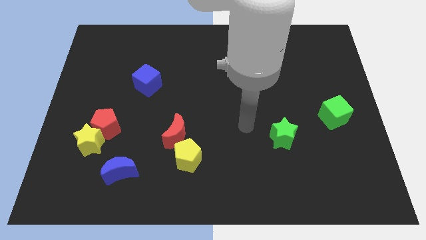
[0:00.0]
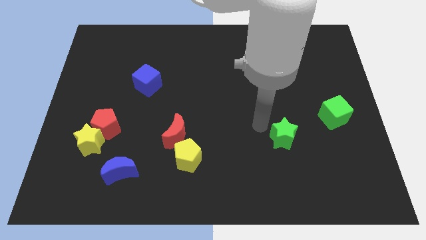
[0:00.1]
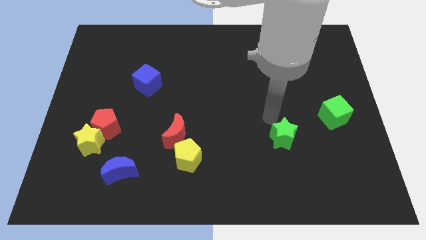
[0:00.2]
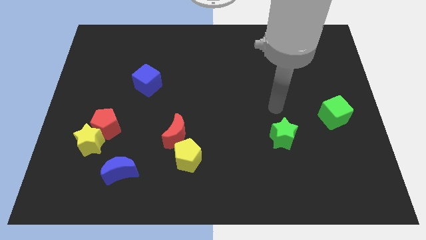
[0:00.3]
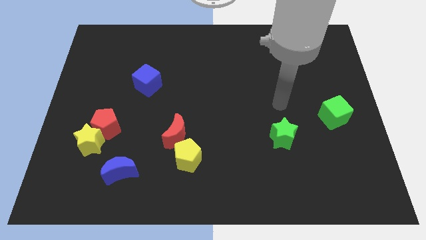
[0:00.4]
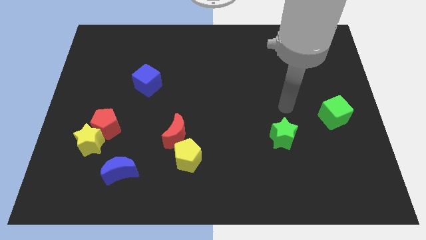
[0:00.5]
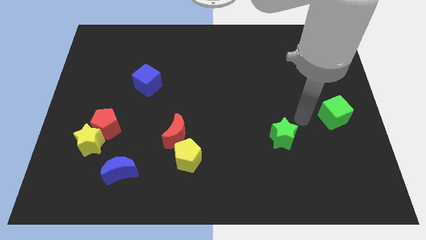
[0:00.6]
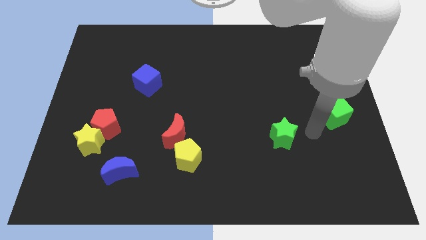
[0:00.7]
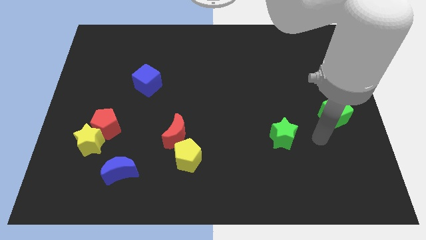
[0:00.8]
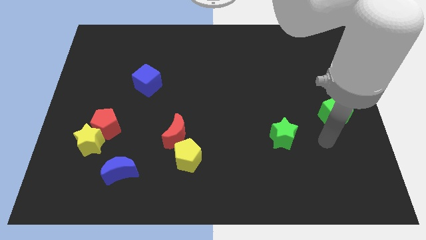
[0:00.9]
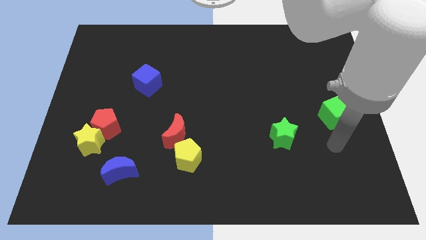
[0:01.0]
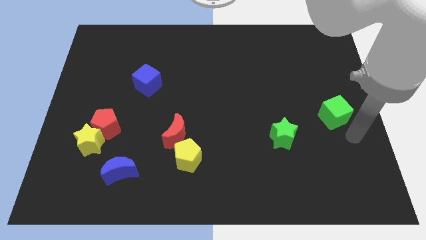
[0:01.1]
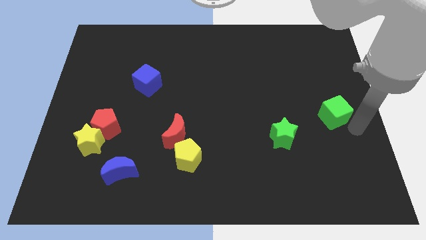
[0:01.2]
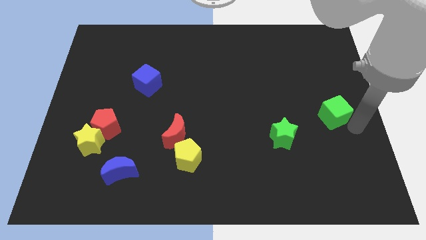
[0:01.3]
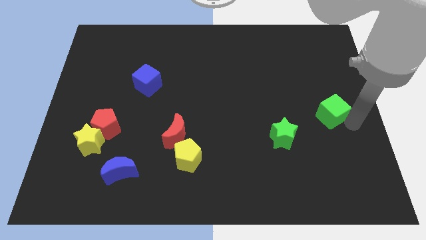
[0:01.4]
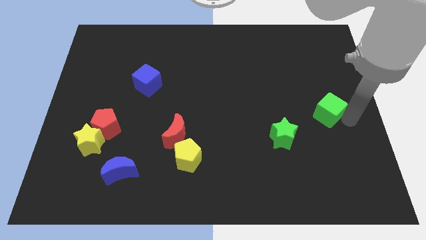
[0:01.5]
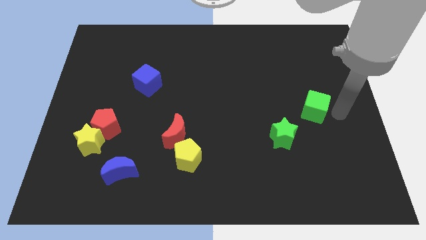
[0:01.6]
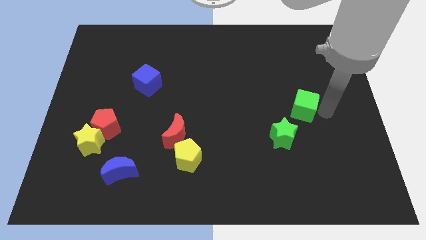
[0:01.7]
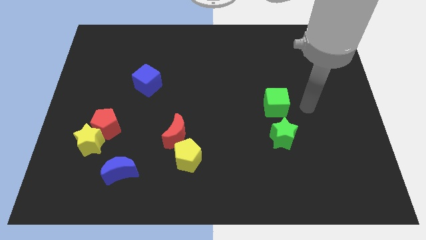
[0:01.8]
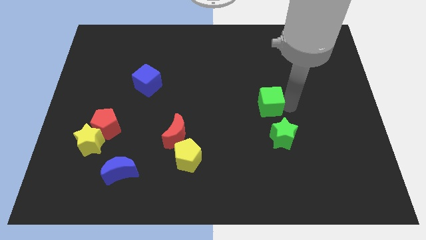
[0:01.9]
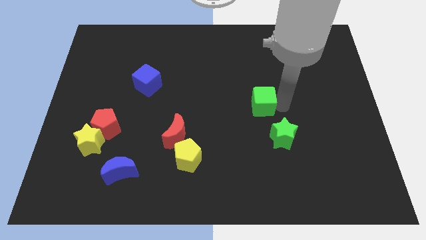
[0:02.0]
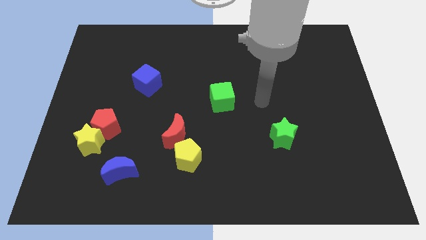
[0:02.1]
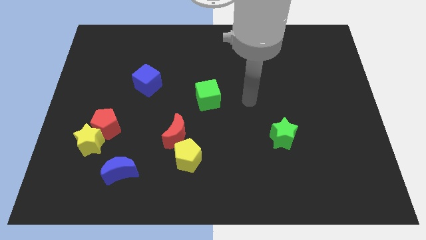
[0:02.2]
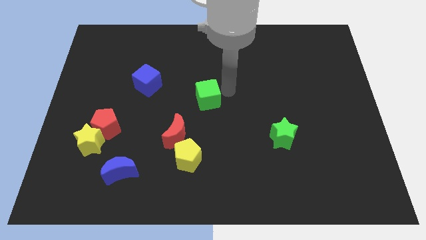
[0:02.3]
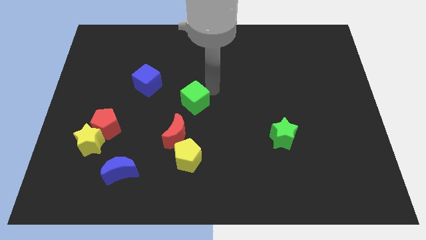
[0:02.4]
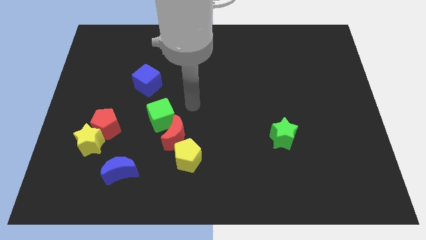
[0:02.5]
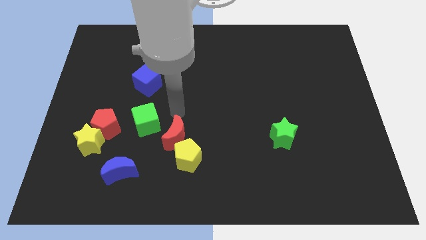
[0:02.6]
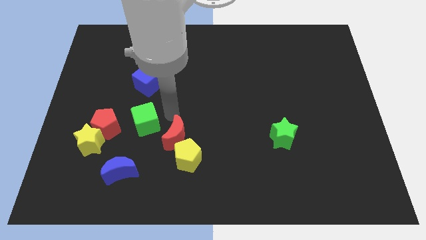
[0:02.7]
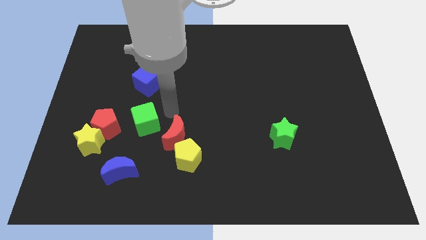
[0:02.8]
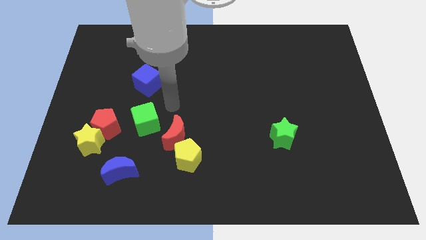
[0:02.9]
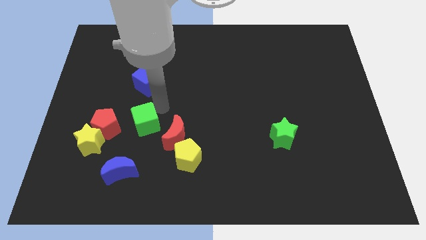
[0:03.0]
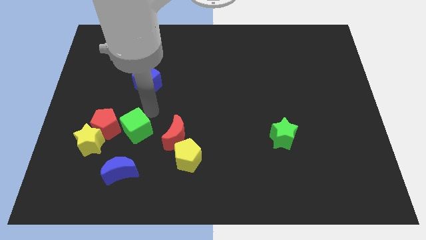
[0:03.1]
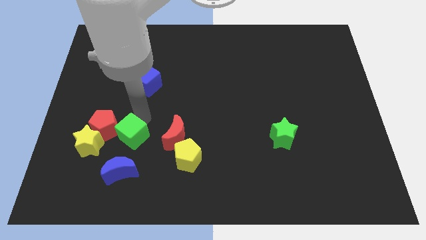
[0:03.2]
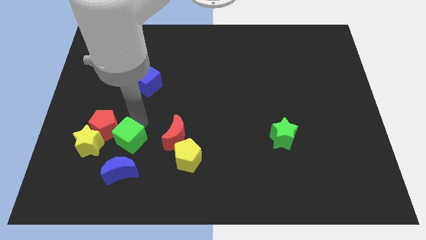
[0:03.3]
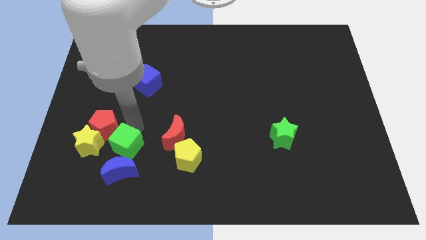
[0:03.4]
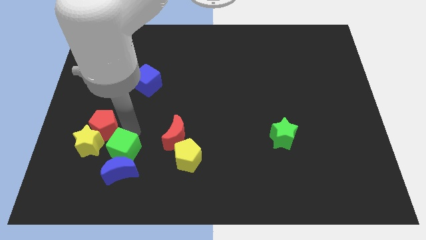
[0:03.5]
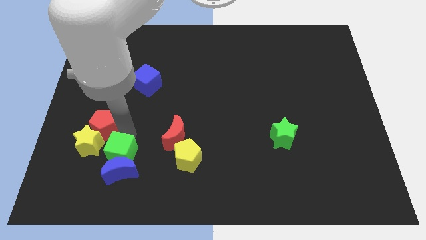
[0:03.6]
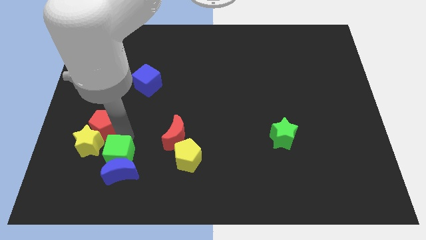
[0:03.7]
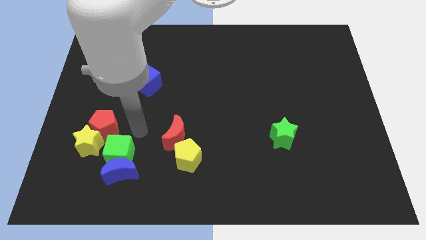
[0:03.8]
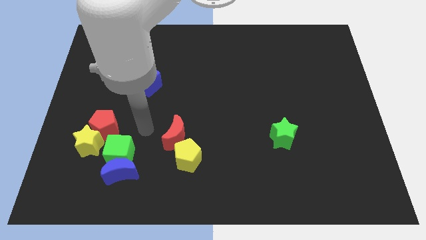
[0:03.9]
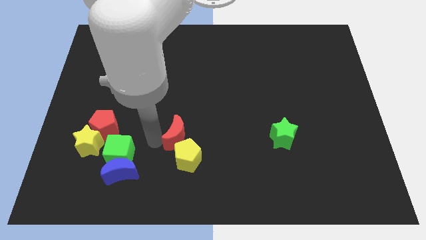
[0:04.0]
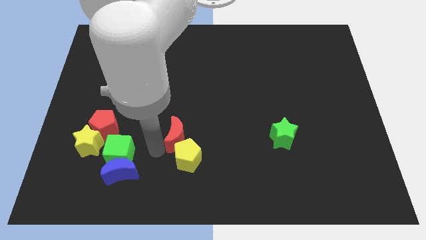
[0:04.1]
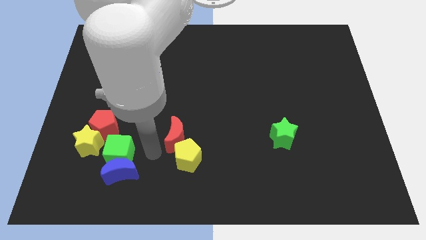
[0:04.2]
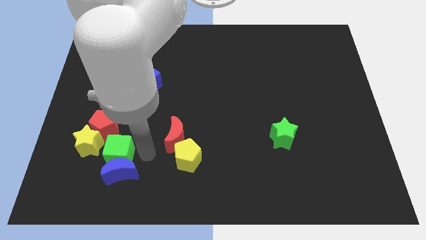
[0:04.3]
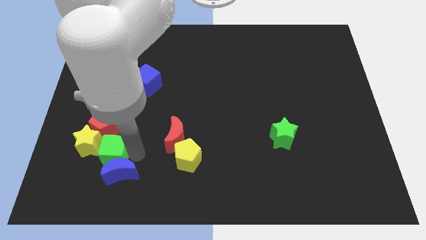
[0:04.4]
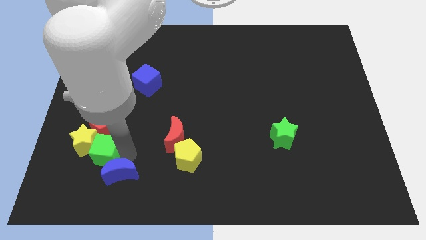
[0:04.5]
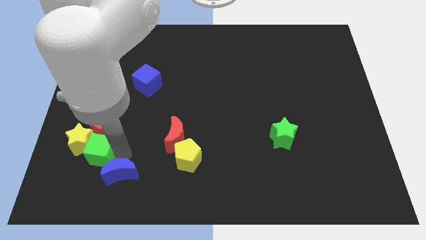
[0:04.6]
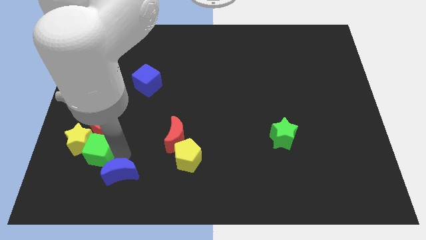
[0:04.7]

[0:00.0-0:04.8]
move the green cube towards the yellow star

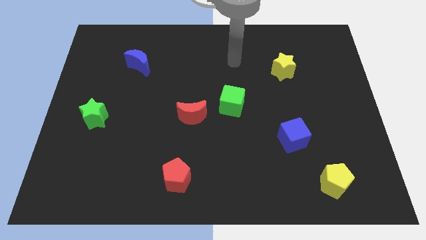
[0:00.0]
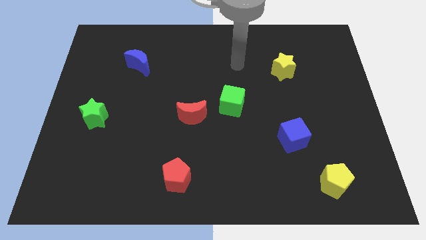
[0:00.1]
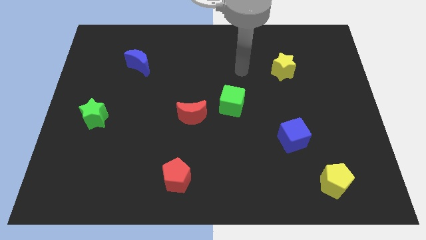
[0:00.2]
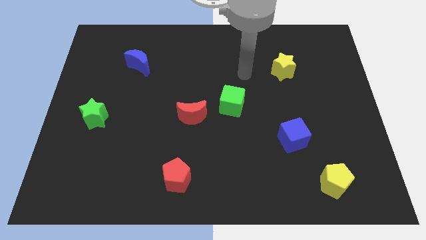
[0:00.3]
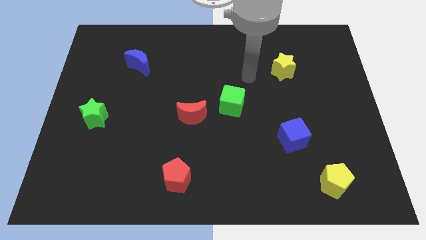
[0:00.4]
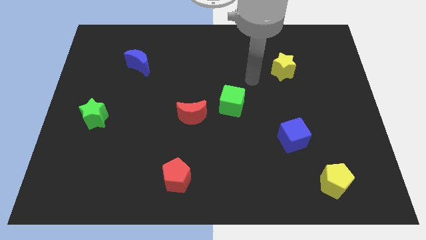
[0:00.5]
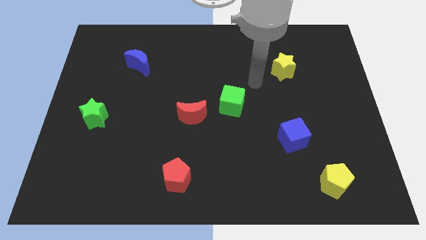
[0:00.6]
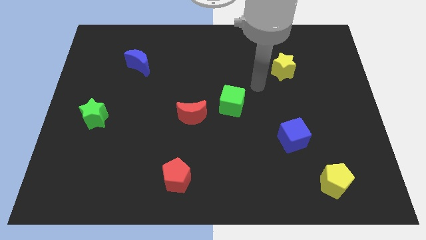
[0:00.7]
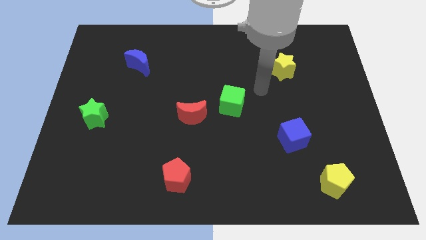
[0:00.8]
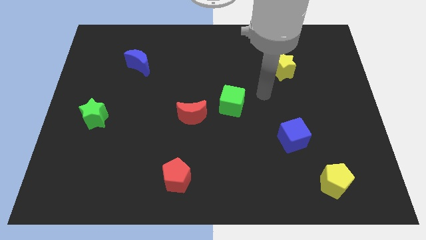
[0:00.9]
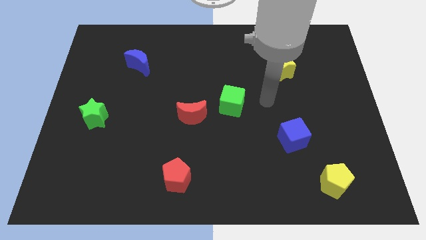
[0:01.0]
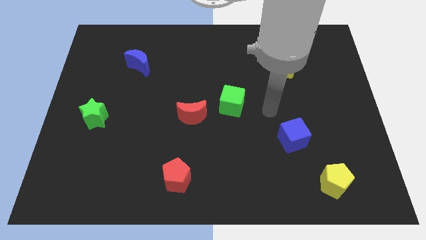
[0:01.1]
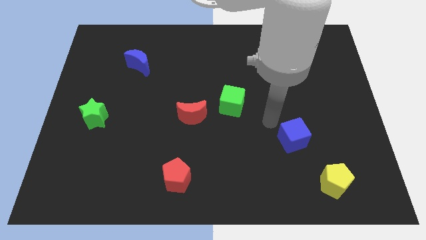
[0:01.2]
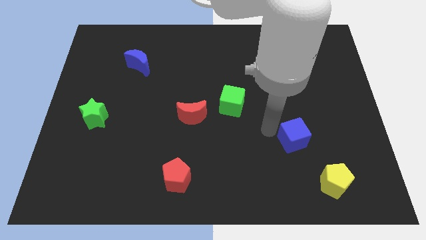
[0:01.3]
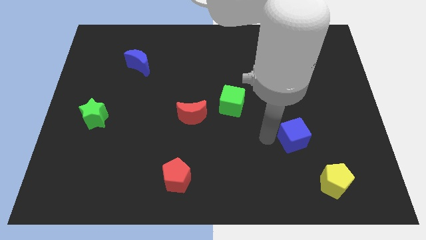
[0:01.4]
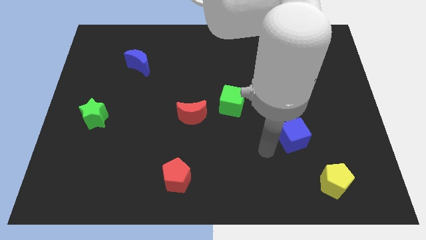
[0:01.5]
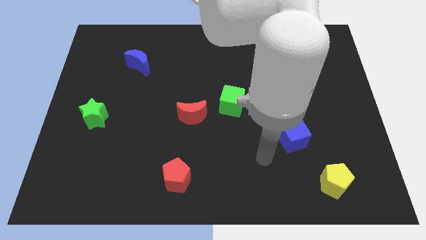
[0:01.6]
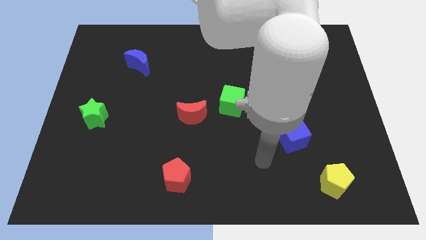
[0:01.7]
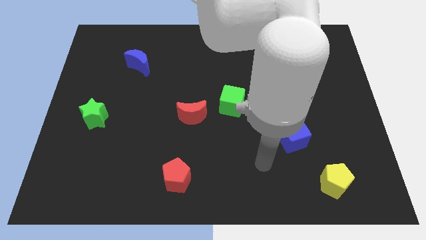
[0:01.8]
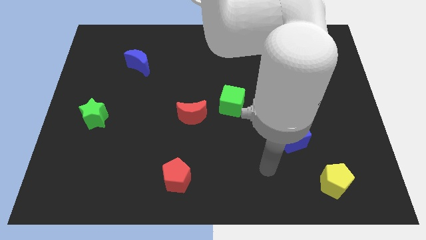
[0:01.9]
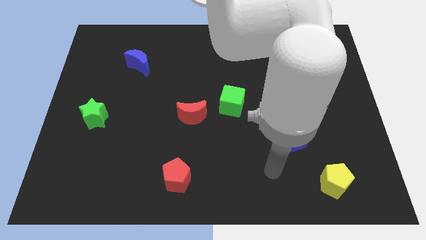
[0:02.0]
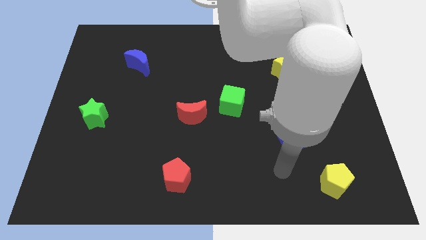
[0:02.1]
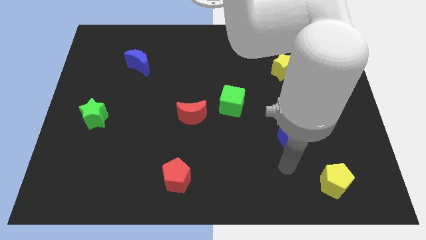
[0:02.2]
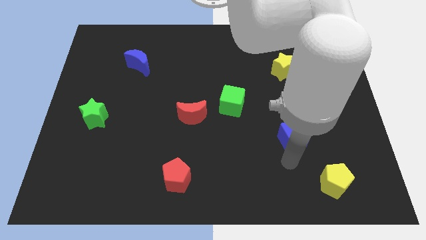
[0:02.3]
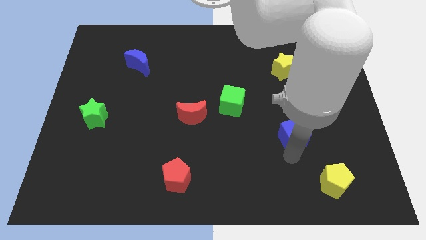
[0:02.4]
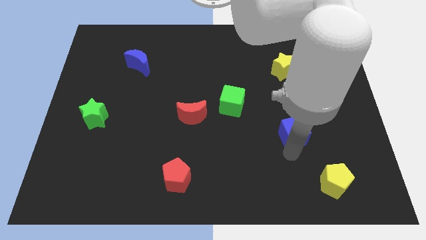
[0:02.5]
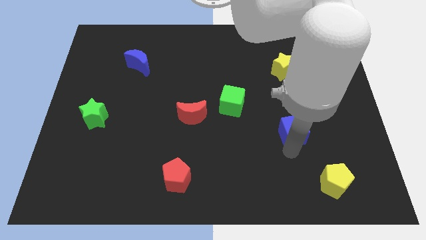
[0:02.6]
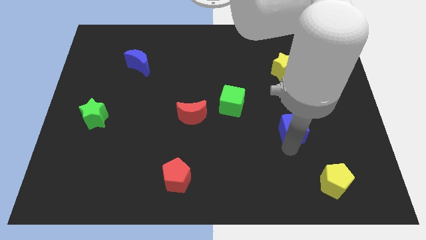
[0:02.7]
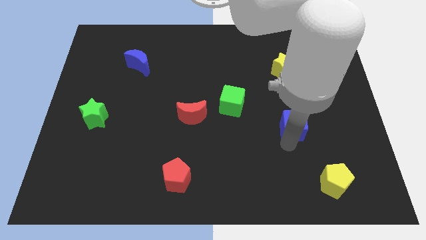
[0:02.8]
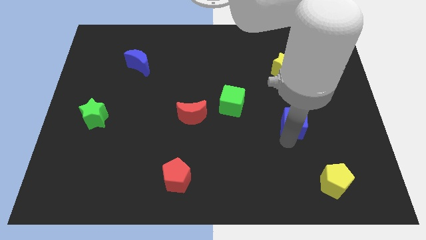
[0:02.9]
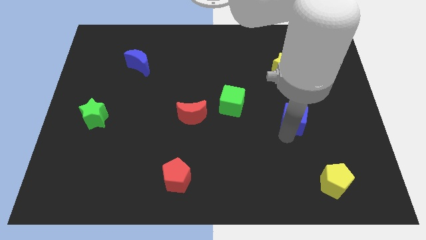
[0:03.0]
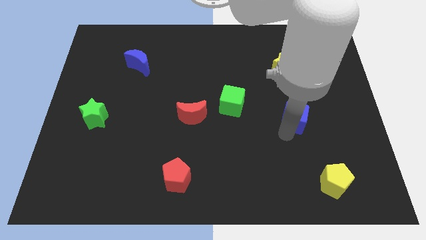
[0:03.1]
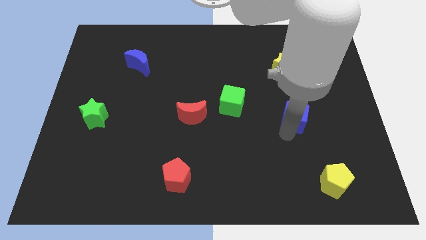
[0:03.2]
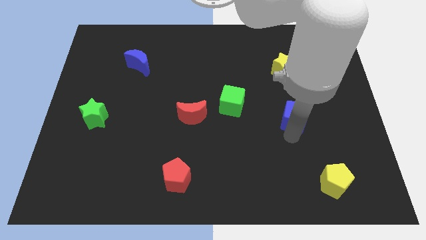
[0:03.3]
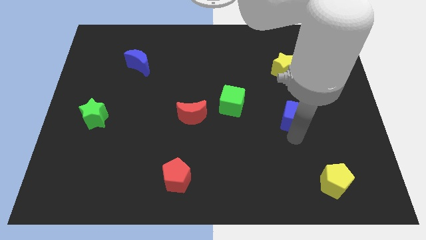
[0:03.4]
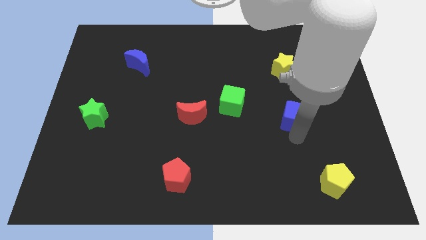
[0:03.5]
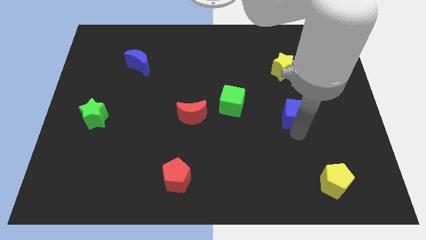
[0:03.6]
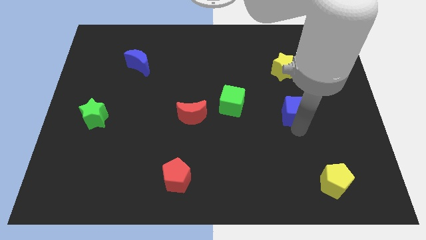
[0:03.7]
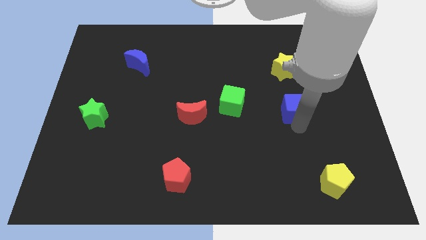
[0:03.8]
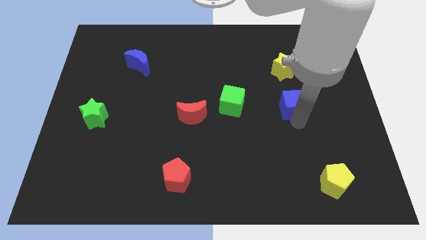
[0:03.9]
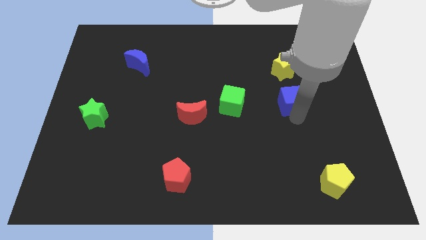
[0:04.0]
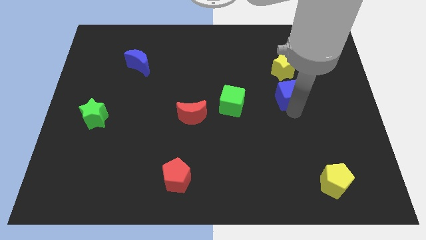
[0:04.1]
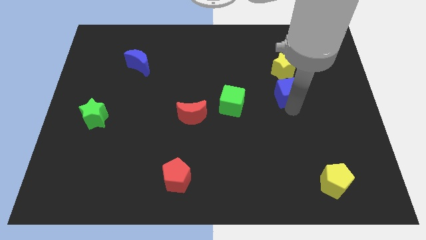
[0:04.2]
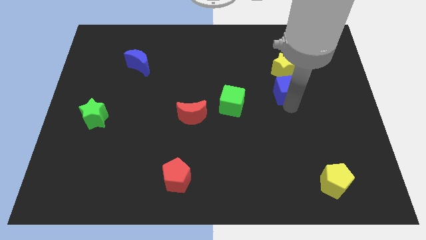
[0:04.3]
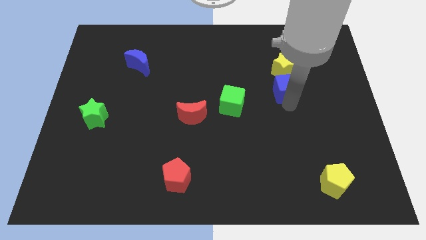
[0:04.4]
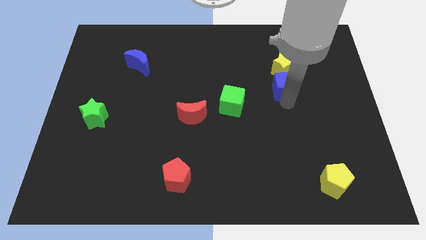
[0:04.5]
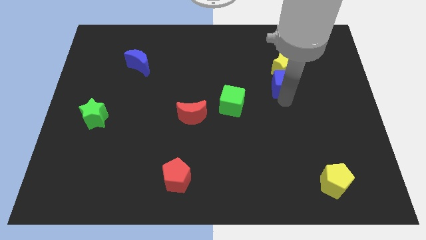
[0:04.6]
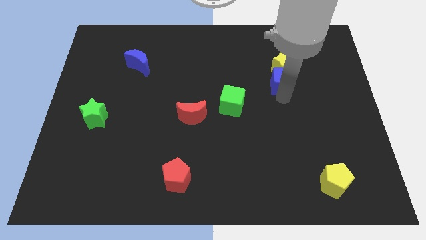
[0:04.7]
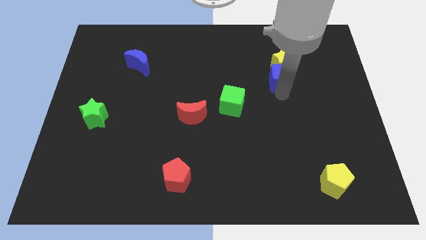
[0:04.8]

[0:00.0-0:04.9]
slide the blue cube towards the yellow star
